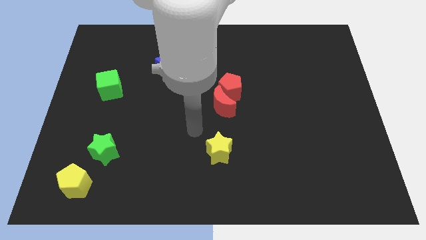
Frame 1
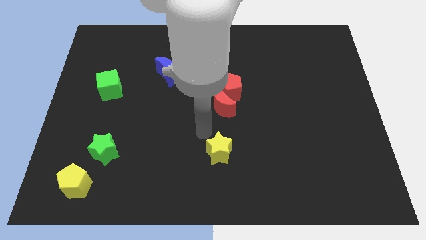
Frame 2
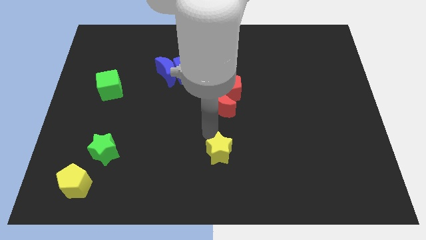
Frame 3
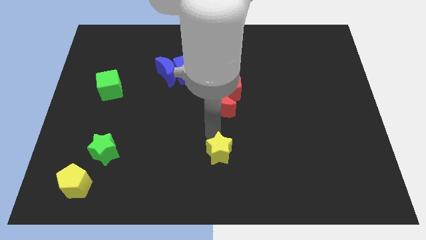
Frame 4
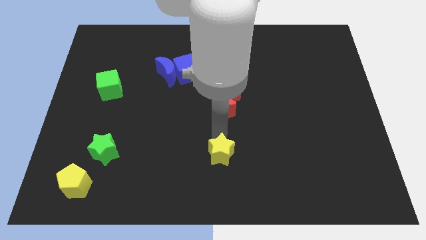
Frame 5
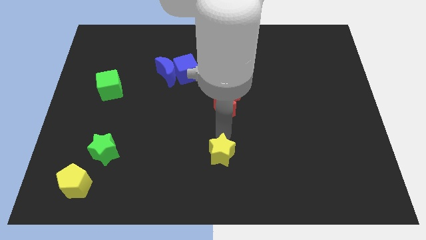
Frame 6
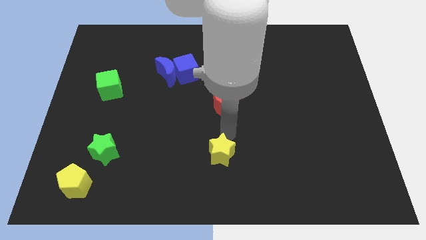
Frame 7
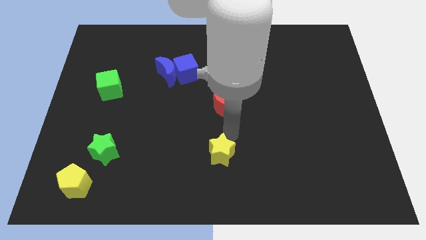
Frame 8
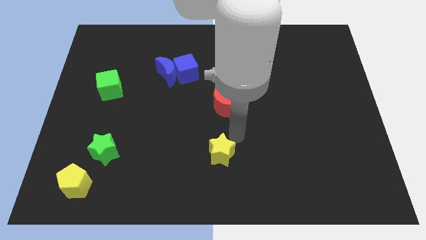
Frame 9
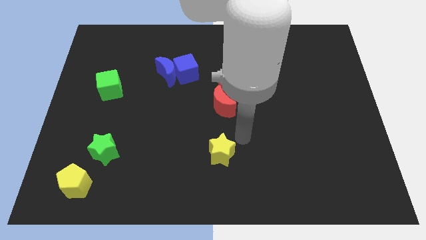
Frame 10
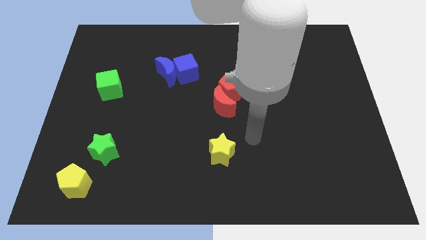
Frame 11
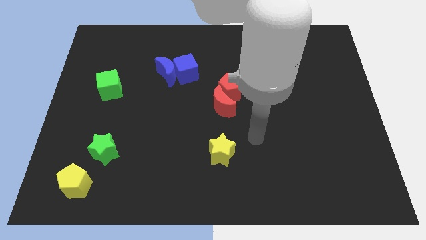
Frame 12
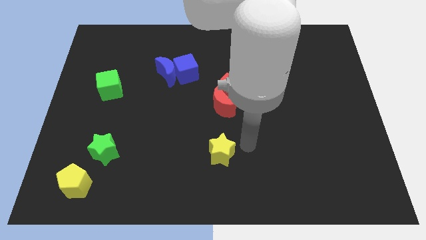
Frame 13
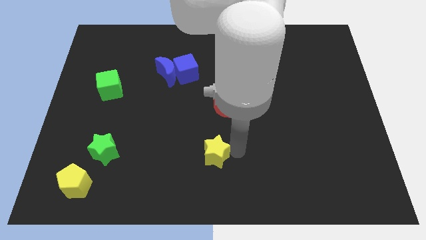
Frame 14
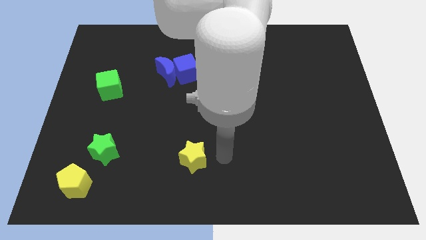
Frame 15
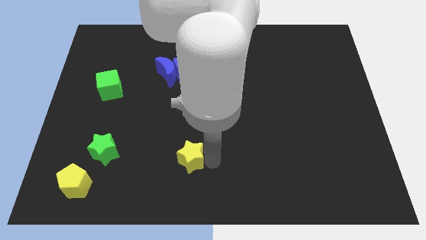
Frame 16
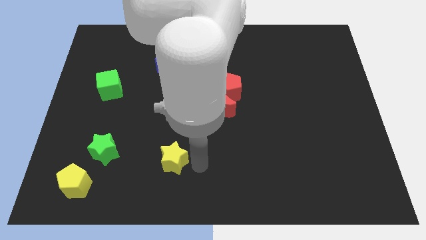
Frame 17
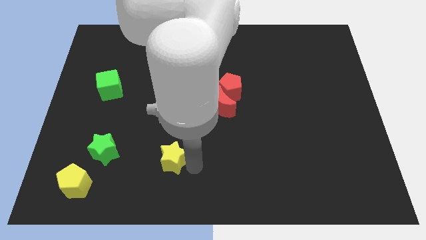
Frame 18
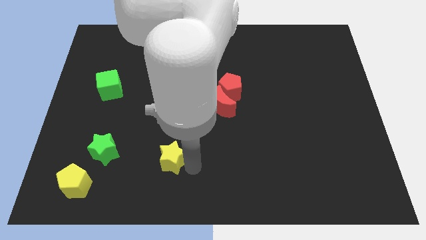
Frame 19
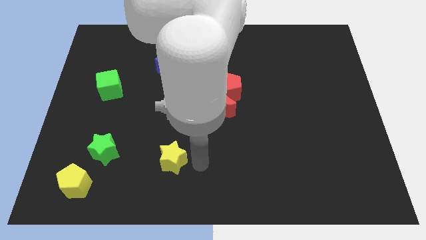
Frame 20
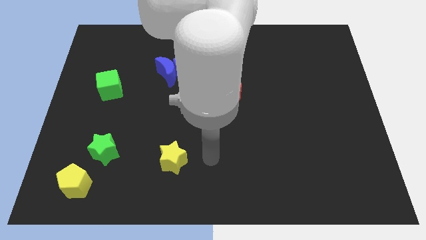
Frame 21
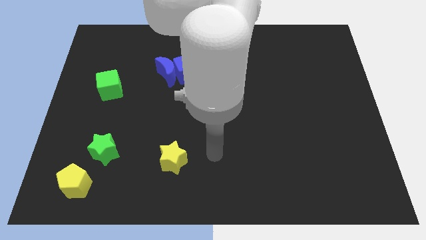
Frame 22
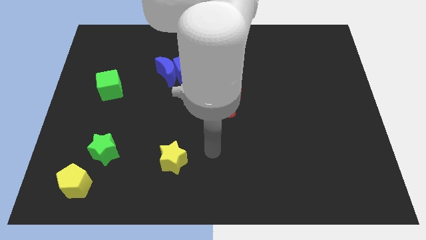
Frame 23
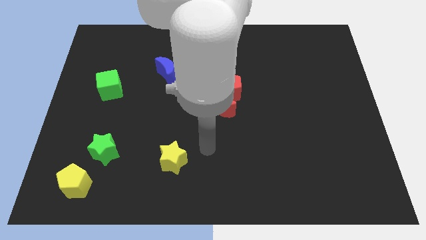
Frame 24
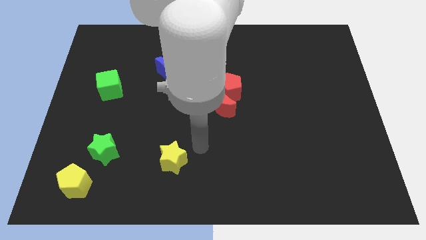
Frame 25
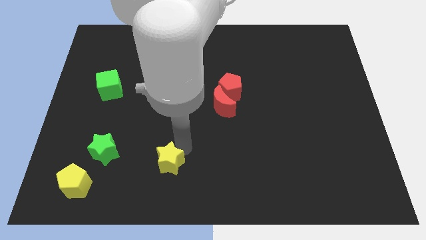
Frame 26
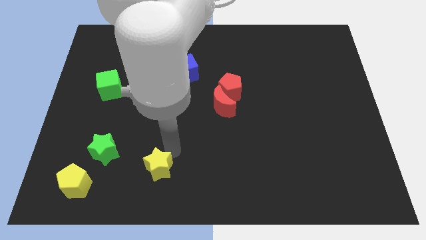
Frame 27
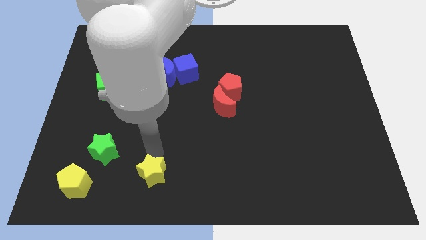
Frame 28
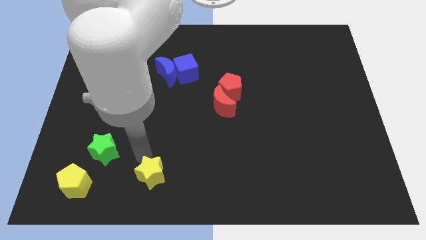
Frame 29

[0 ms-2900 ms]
move the yellow star parallel to the green star

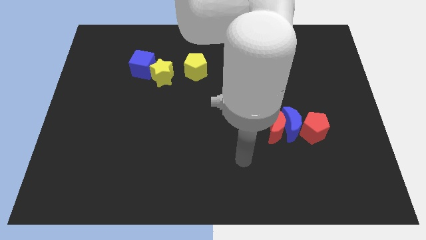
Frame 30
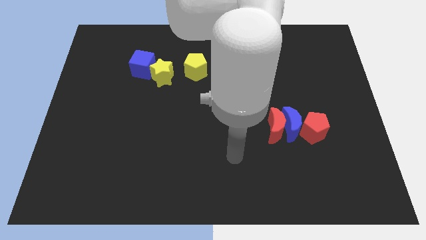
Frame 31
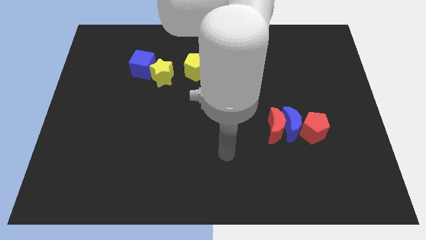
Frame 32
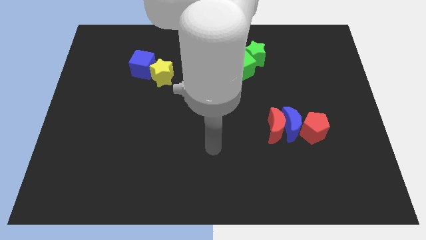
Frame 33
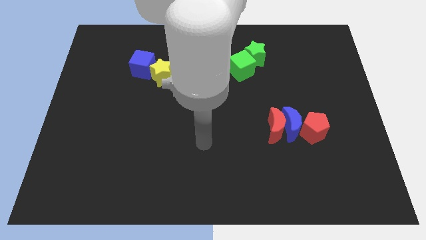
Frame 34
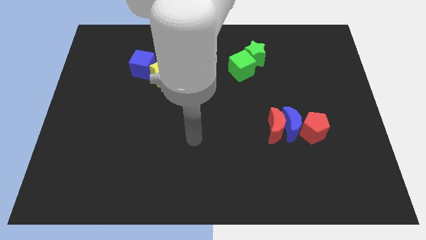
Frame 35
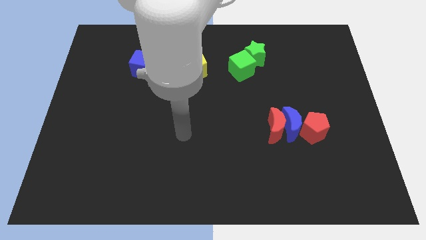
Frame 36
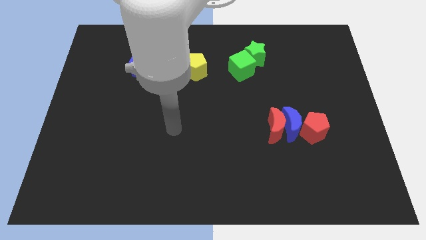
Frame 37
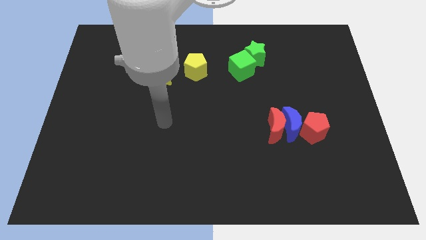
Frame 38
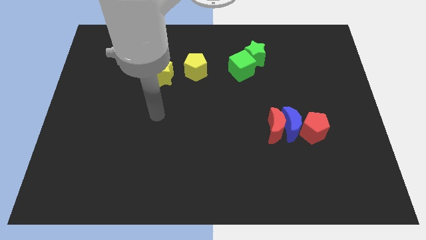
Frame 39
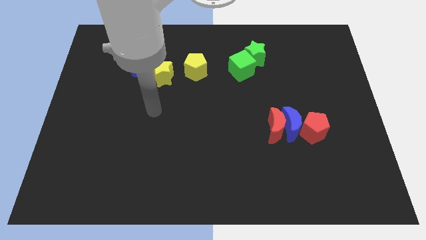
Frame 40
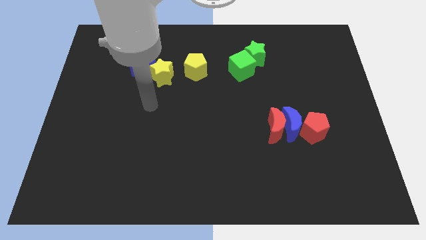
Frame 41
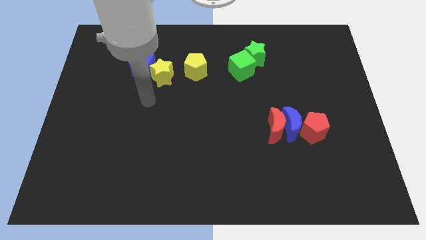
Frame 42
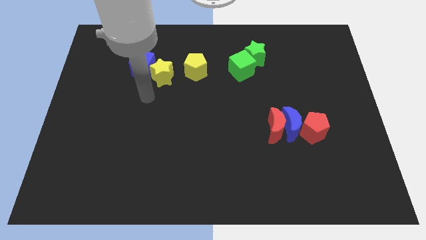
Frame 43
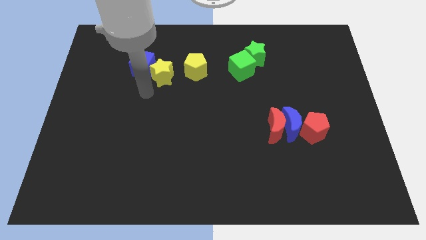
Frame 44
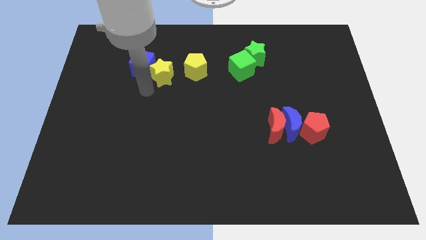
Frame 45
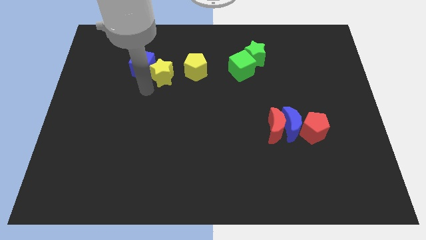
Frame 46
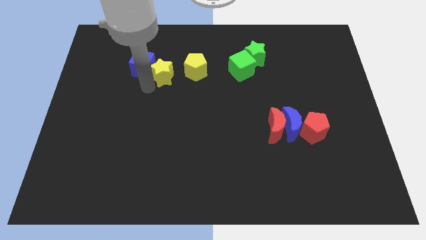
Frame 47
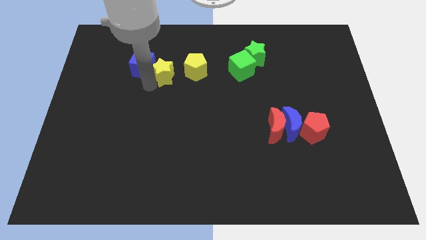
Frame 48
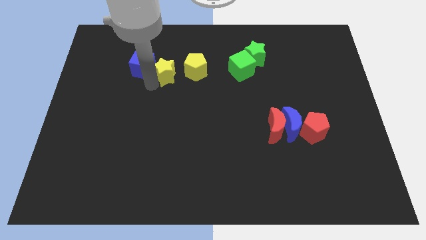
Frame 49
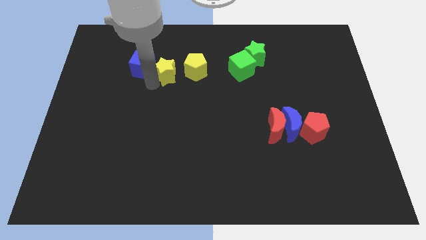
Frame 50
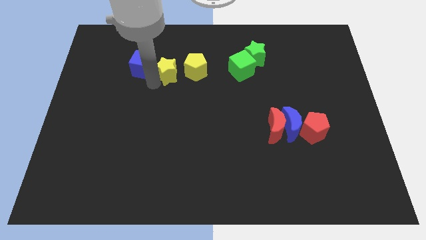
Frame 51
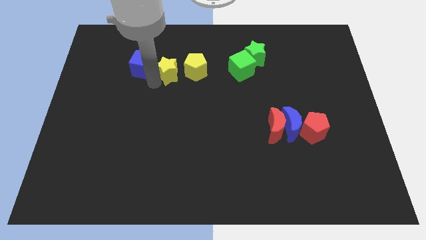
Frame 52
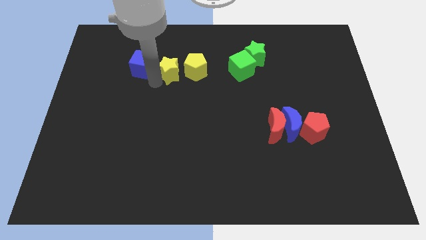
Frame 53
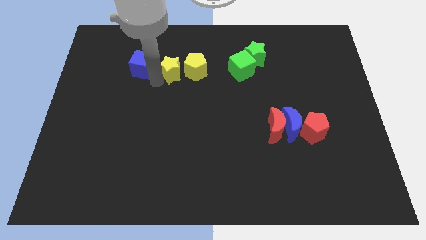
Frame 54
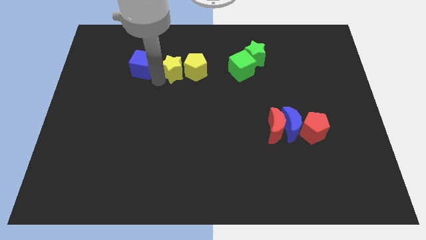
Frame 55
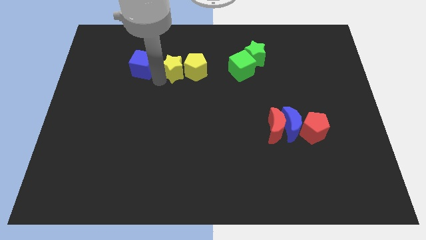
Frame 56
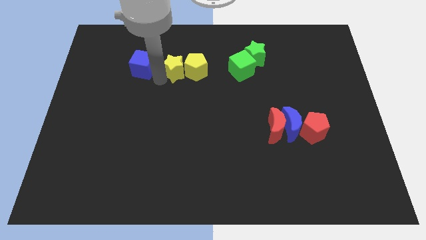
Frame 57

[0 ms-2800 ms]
slide the yellow star into the yellow pentagon

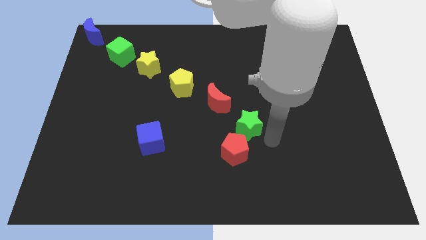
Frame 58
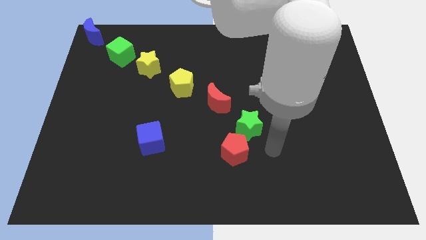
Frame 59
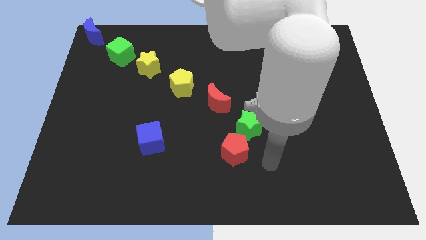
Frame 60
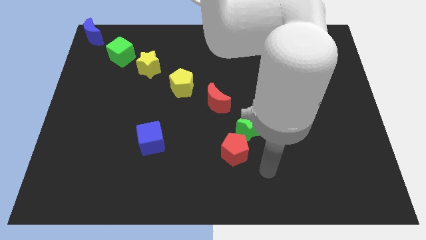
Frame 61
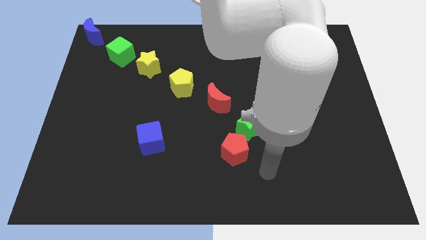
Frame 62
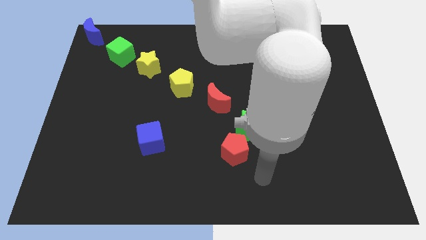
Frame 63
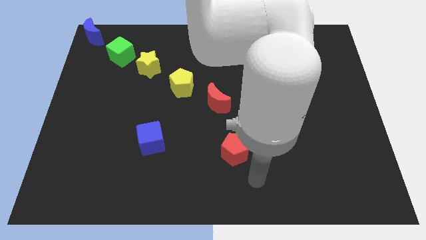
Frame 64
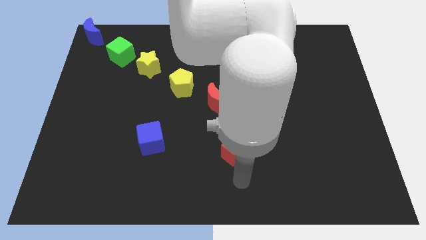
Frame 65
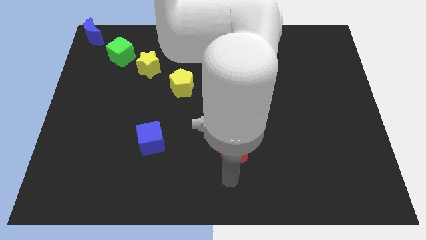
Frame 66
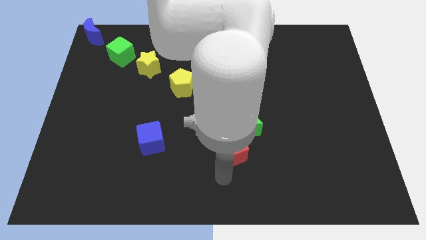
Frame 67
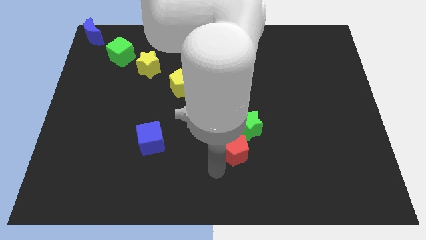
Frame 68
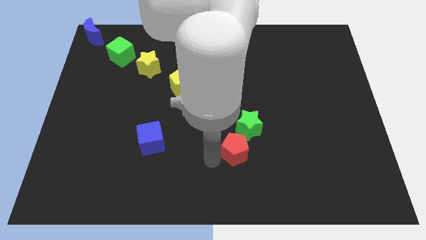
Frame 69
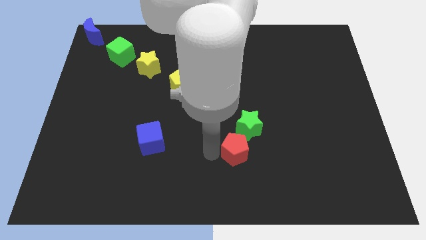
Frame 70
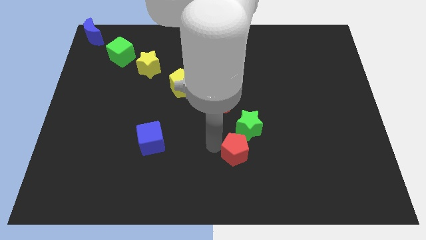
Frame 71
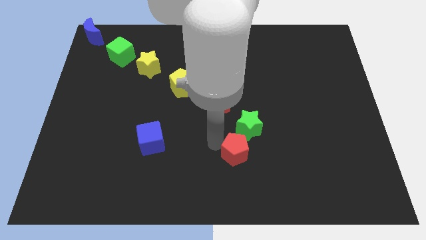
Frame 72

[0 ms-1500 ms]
push the arm to the left to the red pentagon

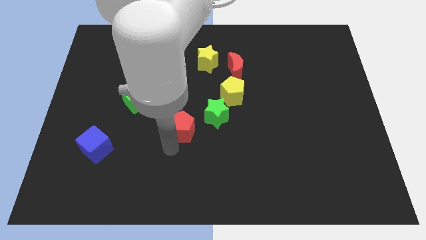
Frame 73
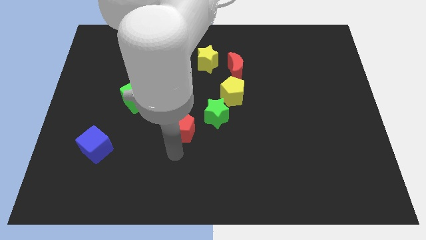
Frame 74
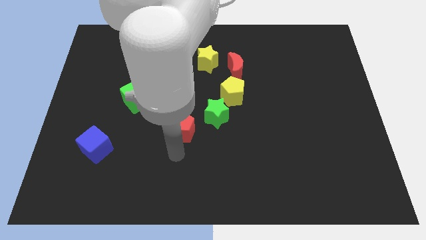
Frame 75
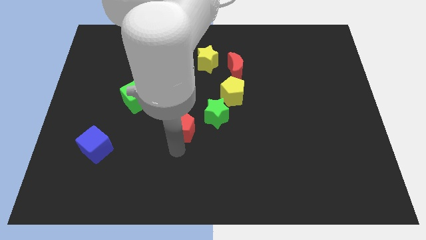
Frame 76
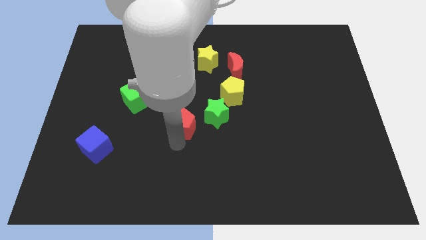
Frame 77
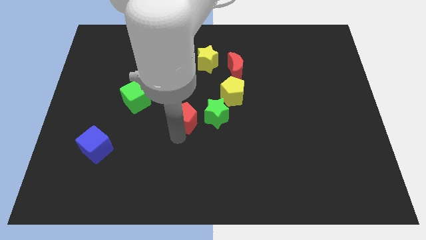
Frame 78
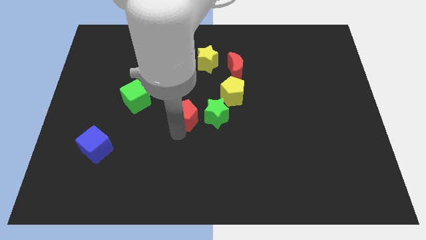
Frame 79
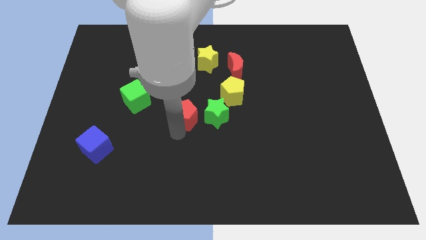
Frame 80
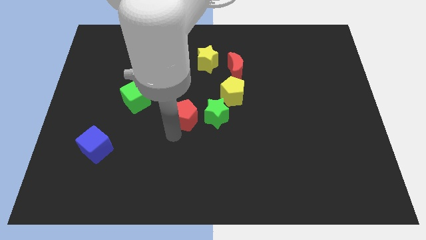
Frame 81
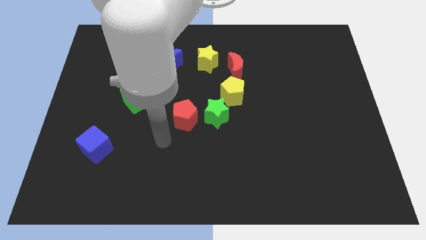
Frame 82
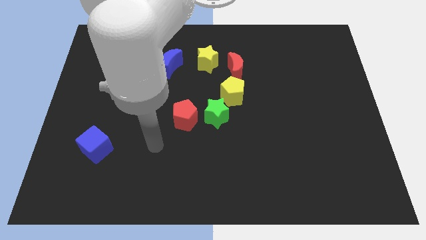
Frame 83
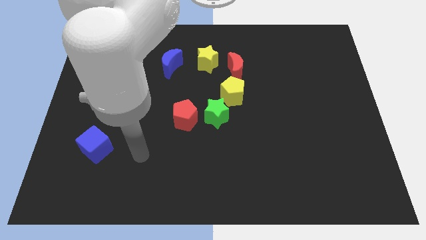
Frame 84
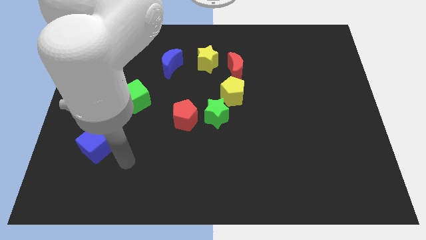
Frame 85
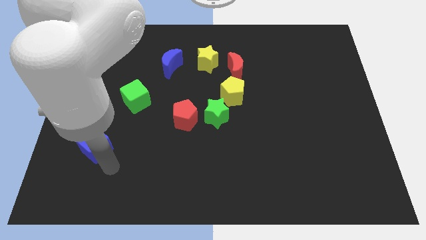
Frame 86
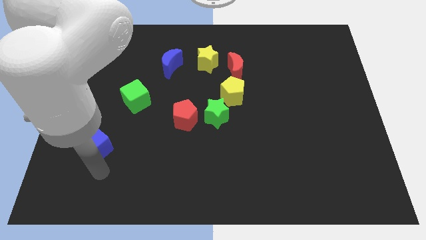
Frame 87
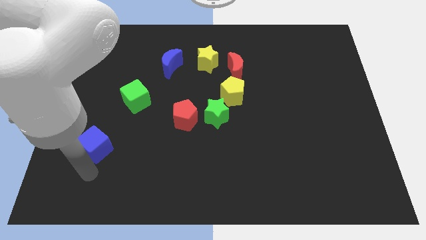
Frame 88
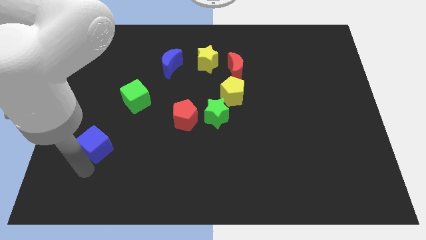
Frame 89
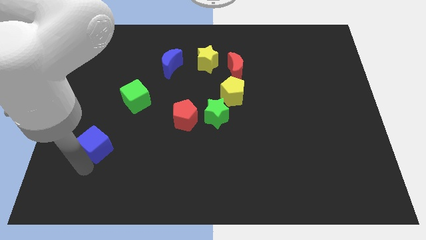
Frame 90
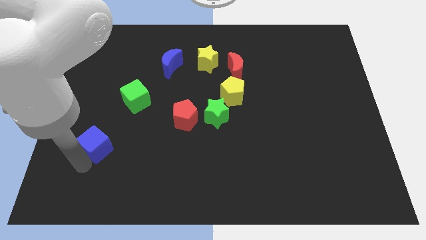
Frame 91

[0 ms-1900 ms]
move the red pentagon left beside the green star
